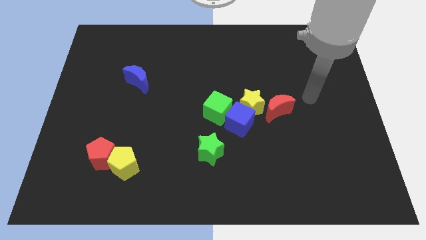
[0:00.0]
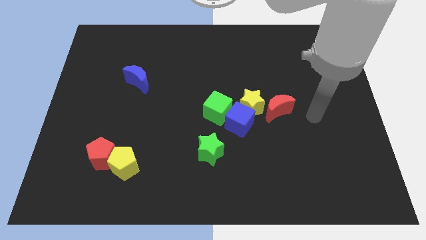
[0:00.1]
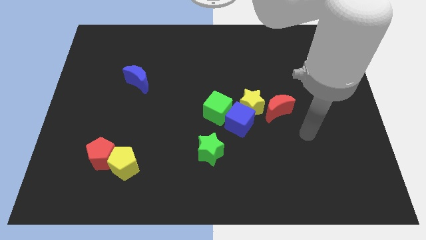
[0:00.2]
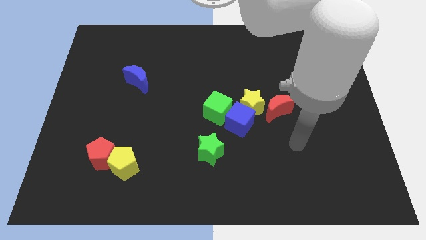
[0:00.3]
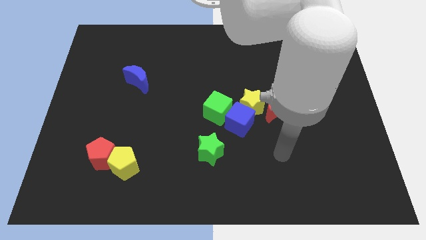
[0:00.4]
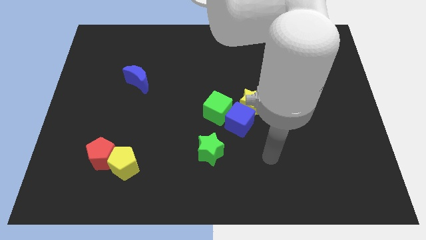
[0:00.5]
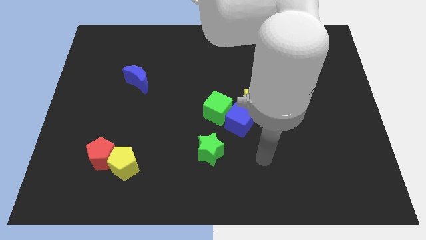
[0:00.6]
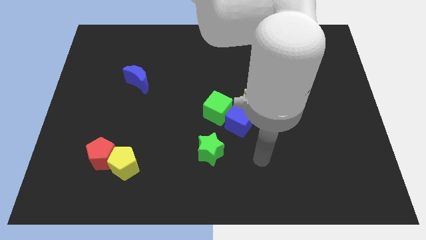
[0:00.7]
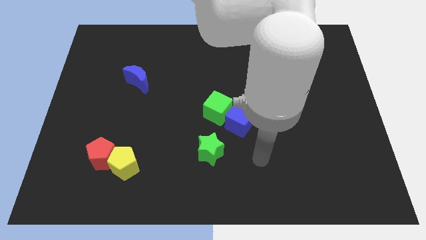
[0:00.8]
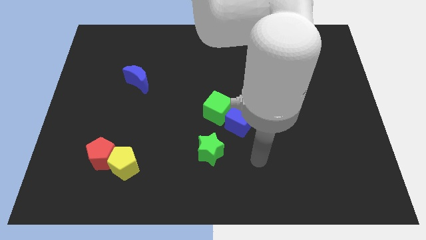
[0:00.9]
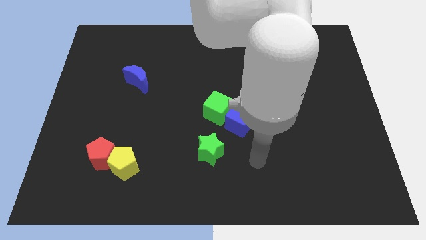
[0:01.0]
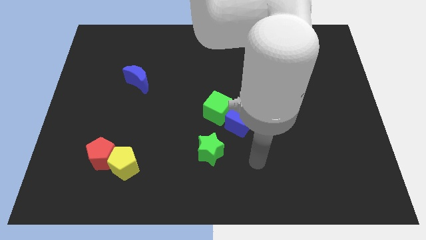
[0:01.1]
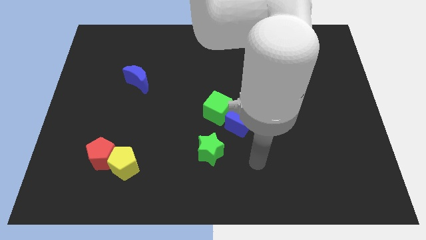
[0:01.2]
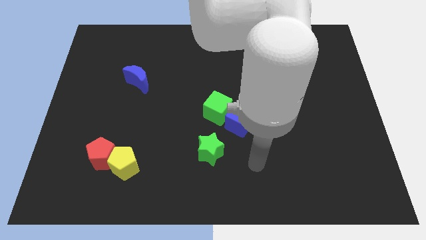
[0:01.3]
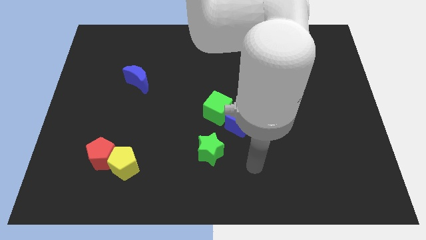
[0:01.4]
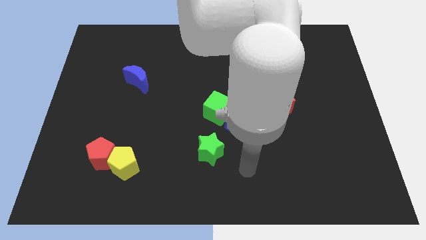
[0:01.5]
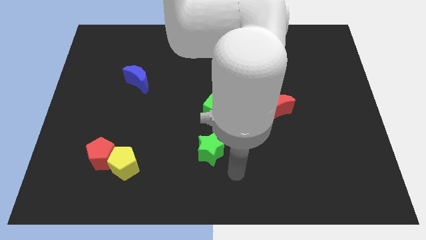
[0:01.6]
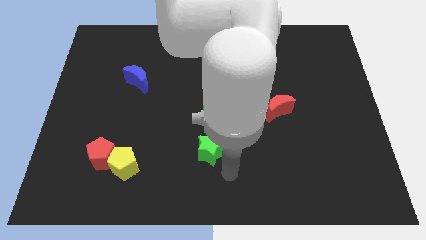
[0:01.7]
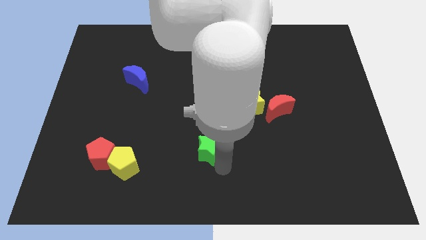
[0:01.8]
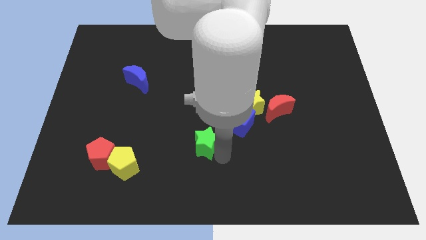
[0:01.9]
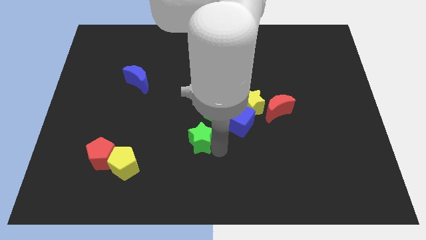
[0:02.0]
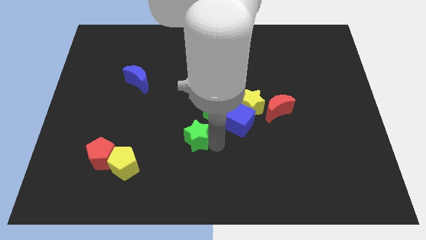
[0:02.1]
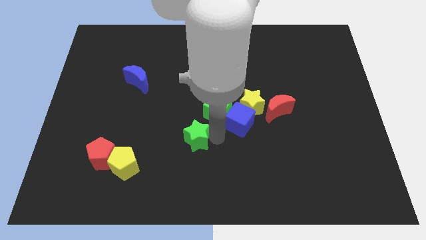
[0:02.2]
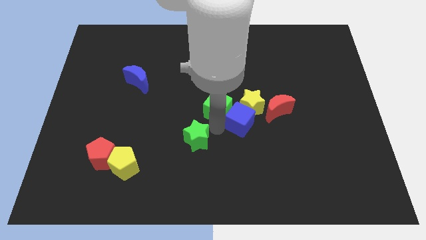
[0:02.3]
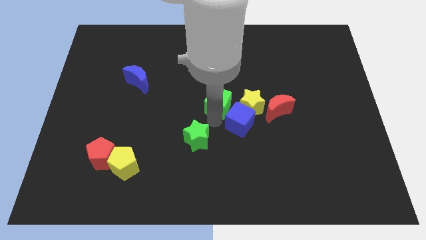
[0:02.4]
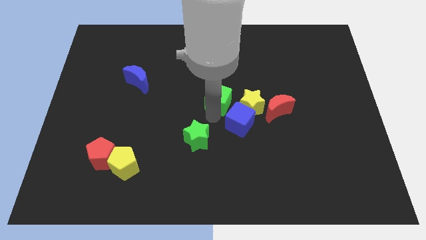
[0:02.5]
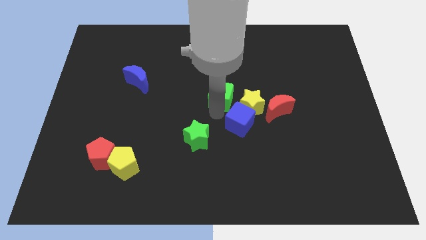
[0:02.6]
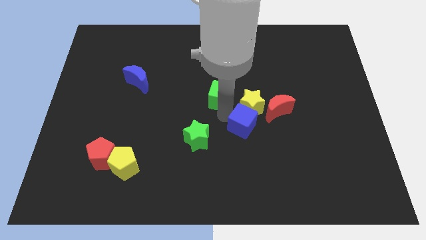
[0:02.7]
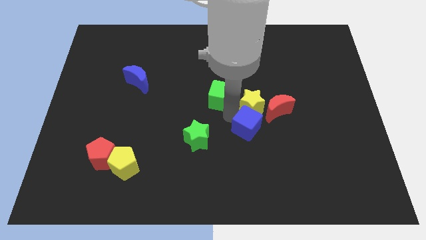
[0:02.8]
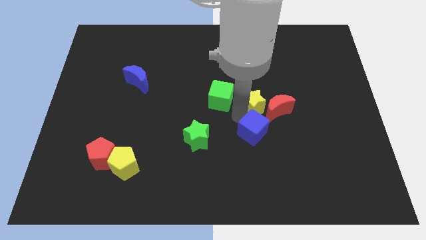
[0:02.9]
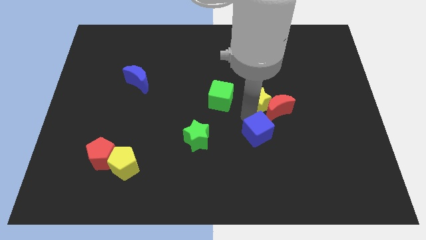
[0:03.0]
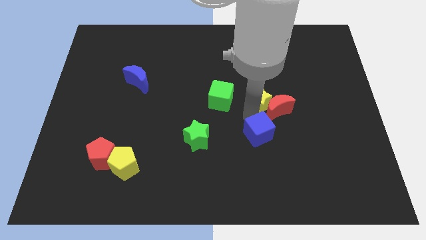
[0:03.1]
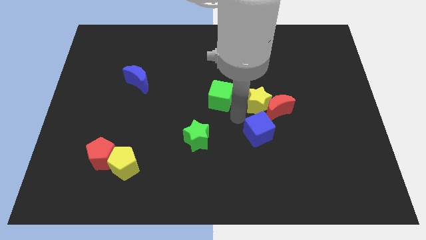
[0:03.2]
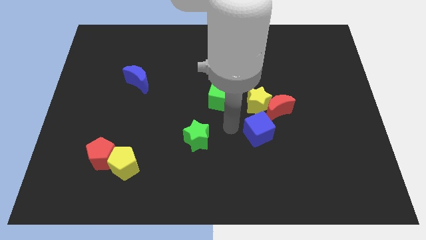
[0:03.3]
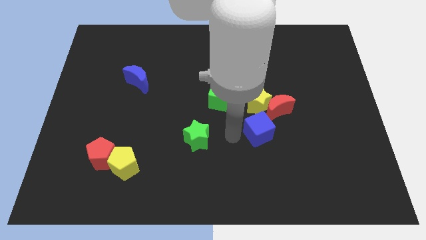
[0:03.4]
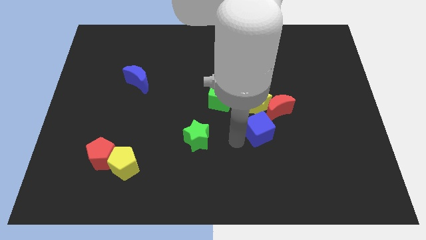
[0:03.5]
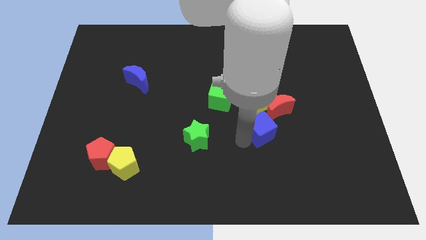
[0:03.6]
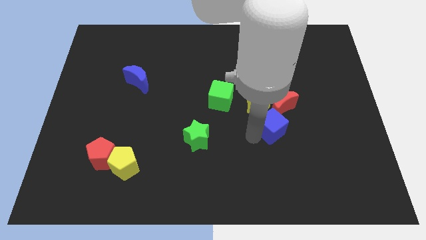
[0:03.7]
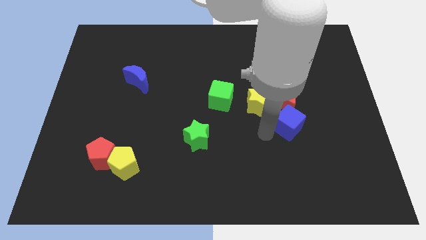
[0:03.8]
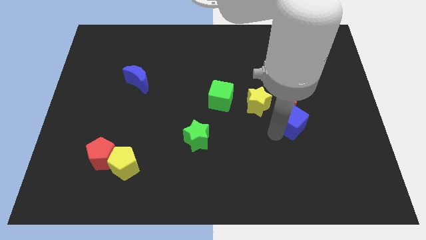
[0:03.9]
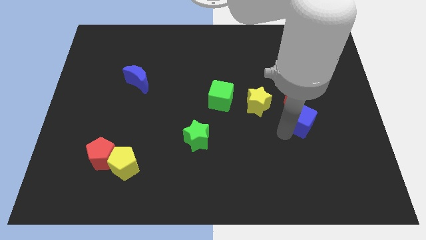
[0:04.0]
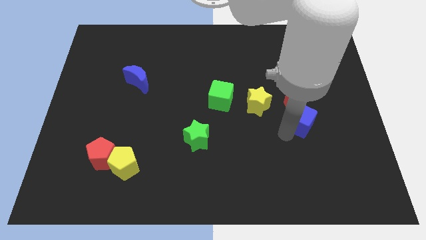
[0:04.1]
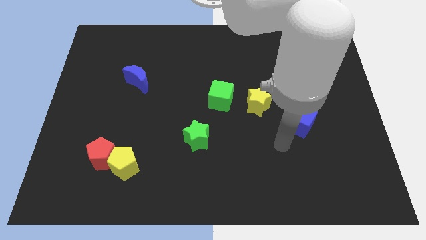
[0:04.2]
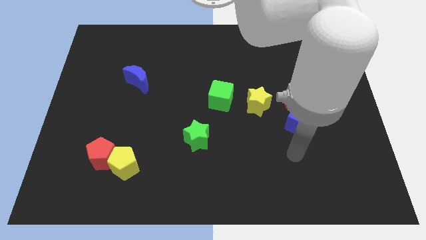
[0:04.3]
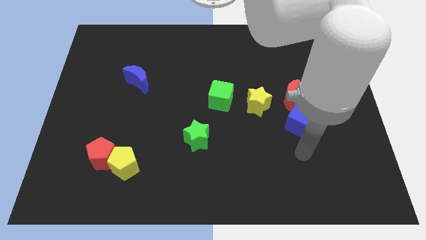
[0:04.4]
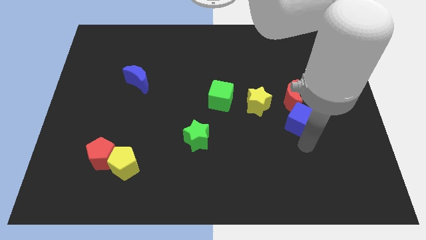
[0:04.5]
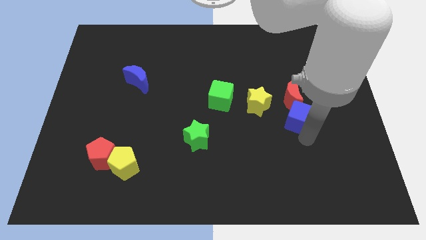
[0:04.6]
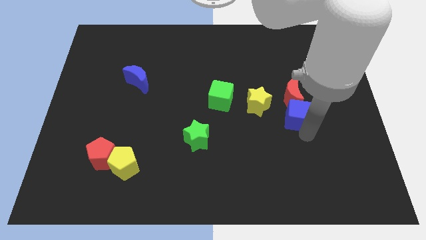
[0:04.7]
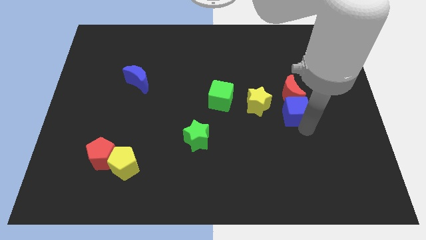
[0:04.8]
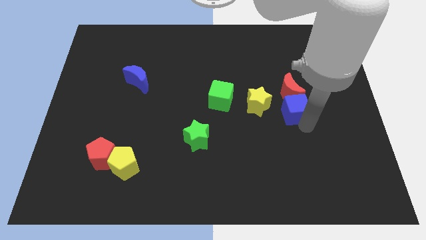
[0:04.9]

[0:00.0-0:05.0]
slide the blue cube close to the red moon

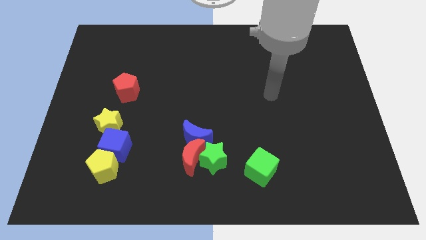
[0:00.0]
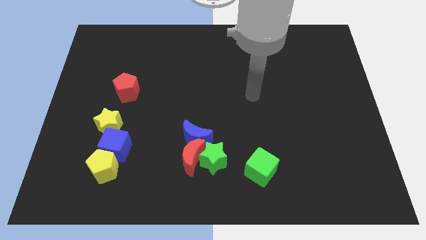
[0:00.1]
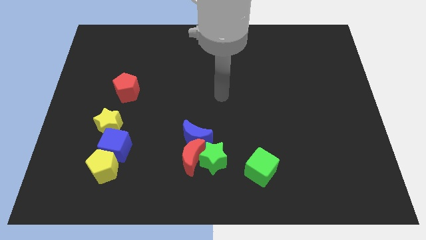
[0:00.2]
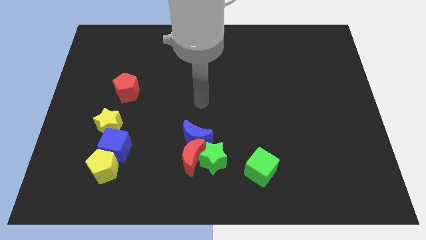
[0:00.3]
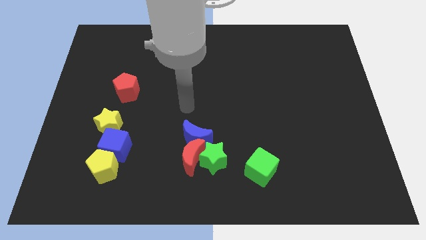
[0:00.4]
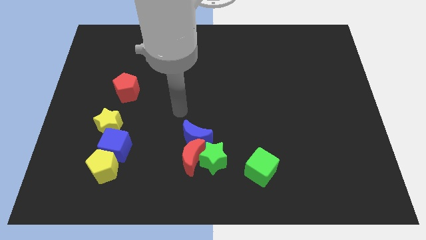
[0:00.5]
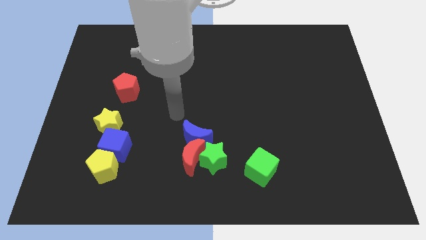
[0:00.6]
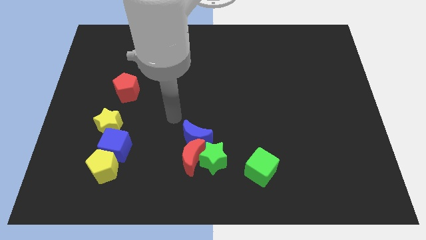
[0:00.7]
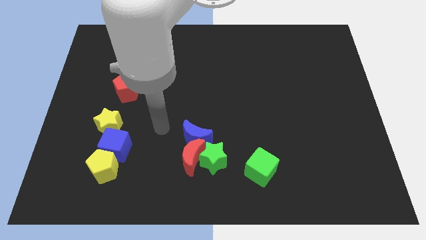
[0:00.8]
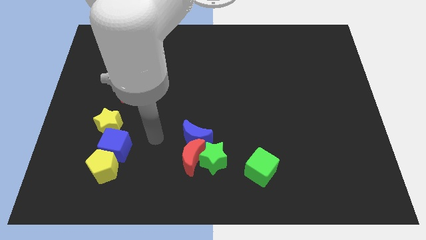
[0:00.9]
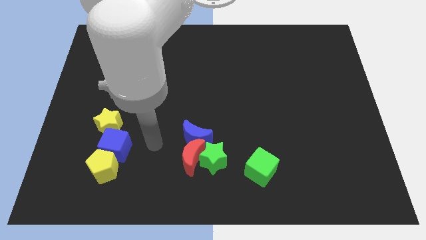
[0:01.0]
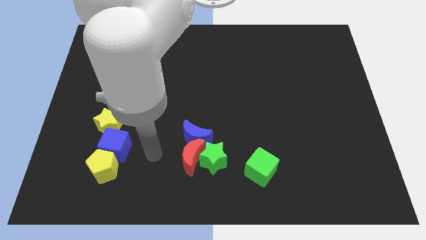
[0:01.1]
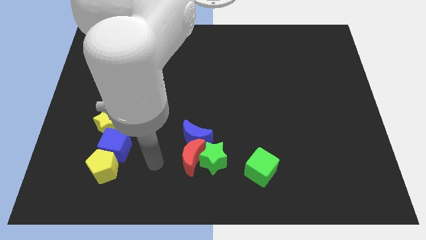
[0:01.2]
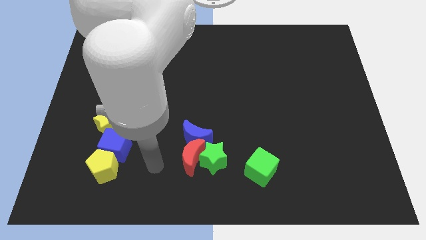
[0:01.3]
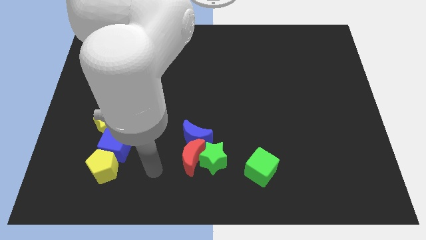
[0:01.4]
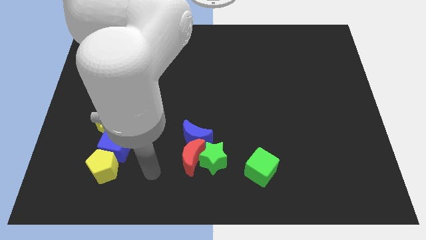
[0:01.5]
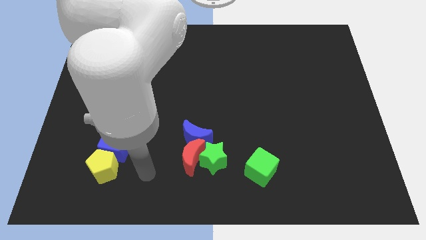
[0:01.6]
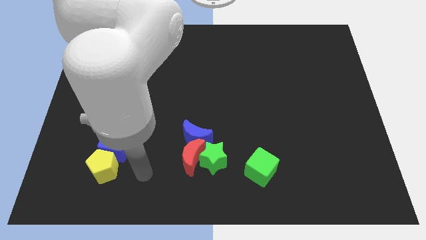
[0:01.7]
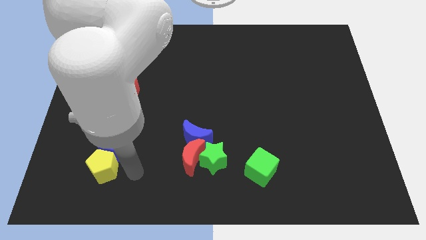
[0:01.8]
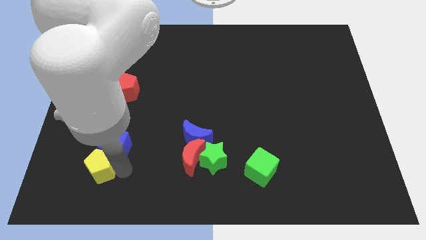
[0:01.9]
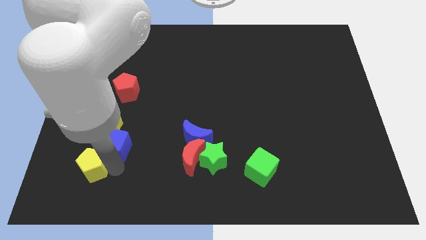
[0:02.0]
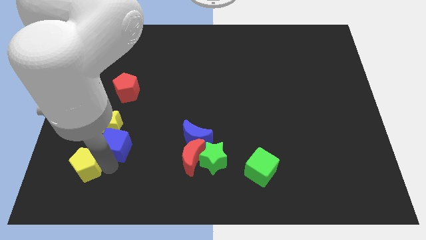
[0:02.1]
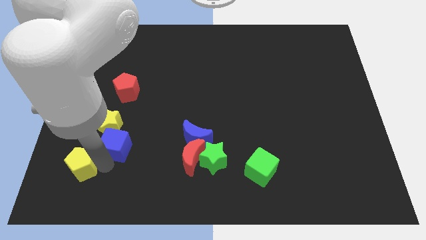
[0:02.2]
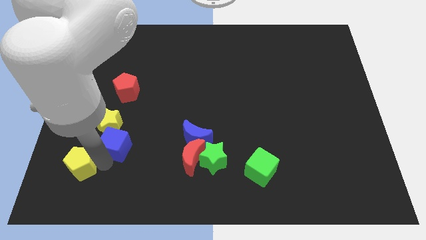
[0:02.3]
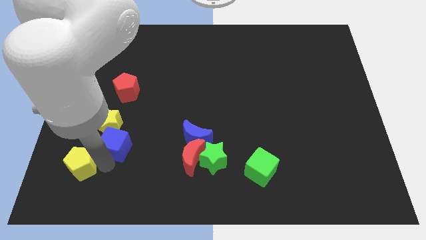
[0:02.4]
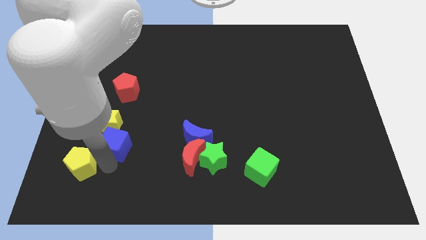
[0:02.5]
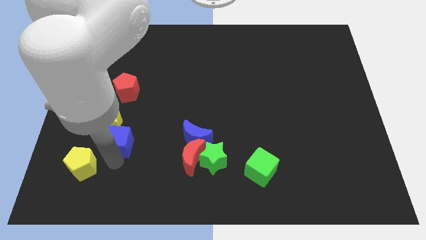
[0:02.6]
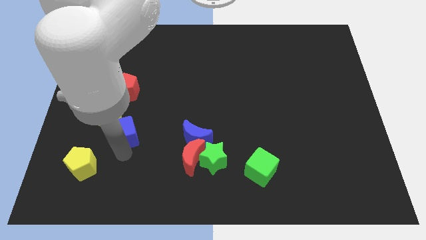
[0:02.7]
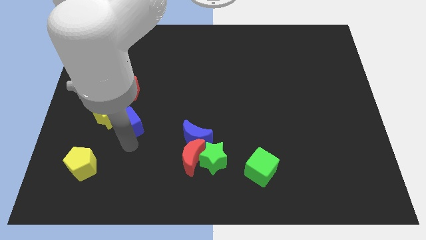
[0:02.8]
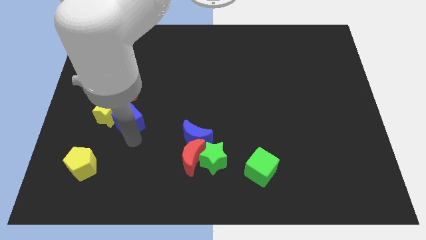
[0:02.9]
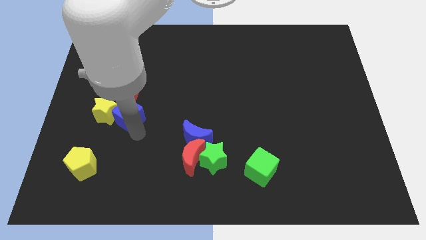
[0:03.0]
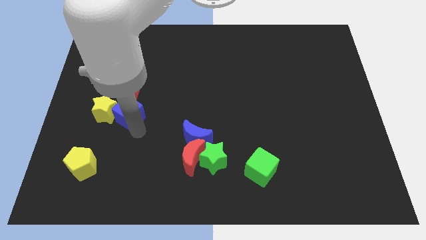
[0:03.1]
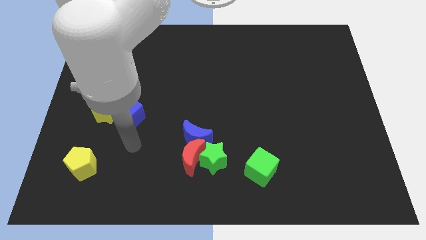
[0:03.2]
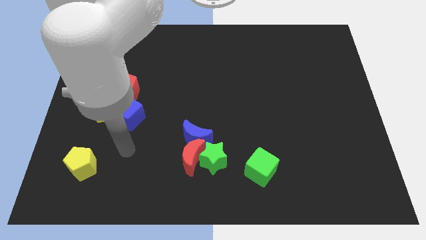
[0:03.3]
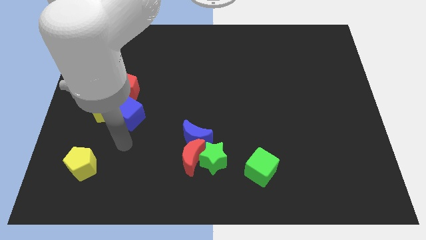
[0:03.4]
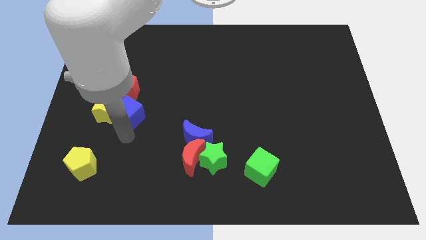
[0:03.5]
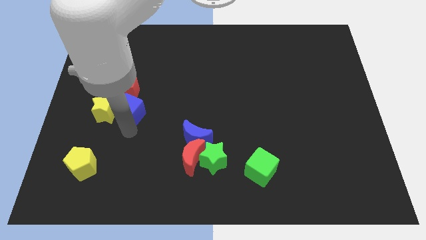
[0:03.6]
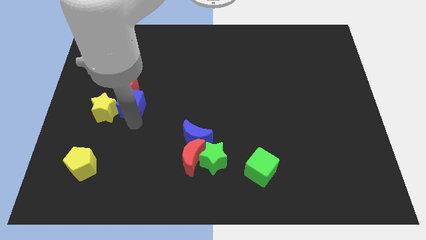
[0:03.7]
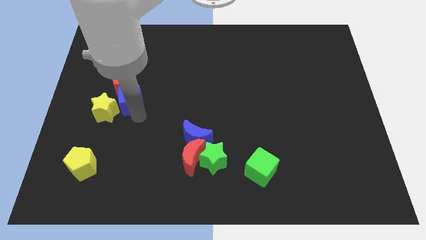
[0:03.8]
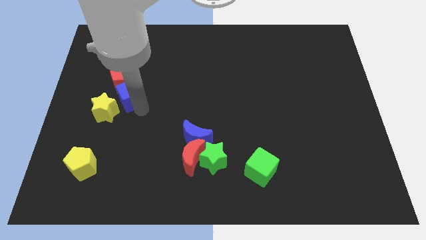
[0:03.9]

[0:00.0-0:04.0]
push the blue cube close to the red pentagon
